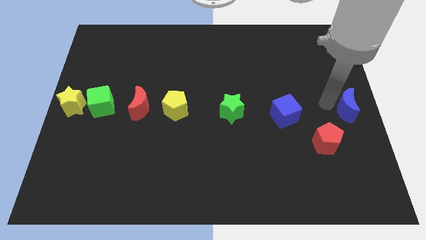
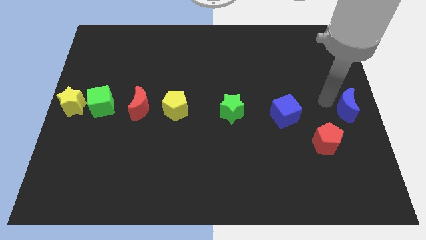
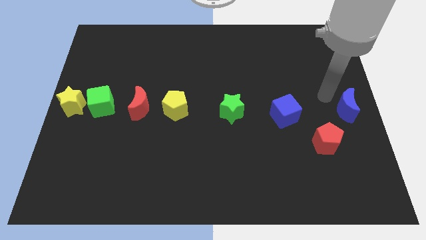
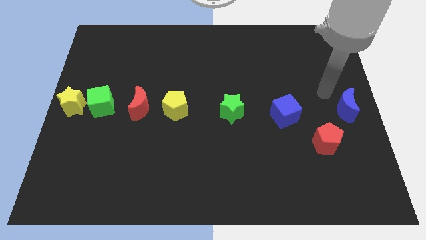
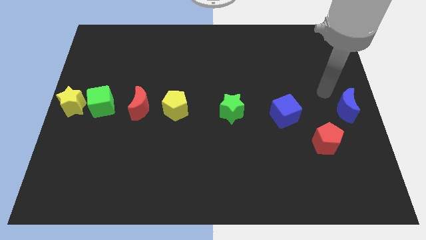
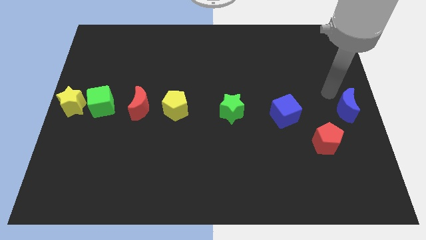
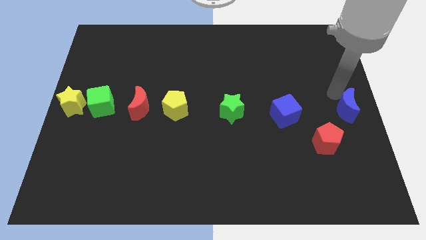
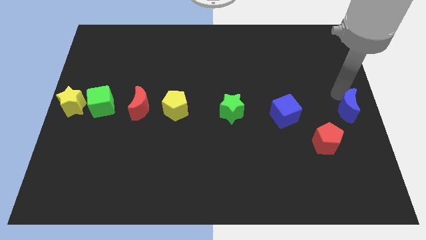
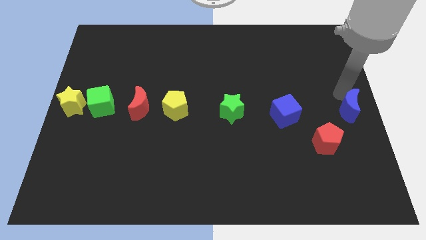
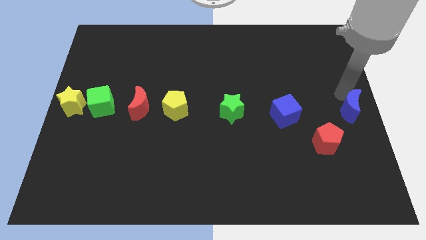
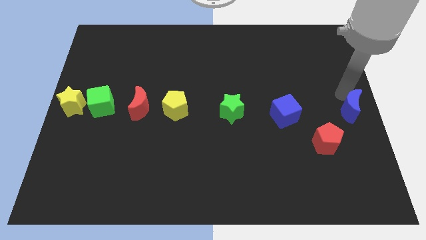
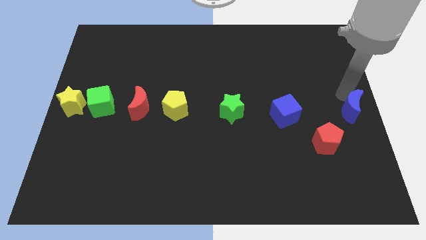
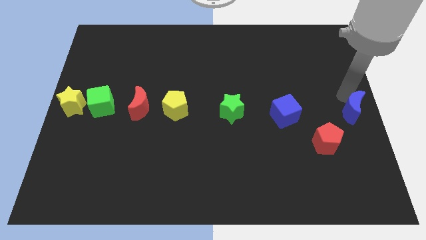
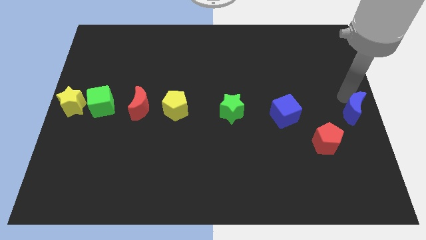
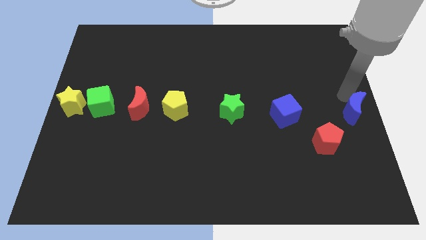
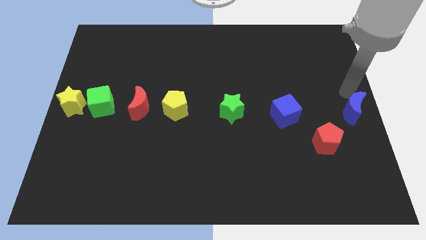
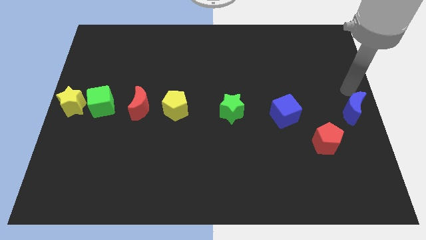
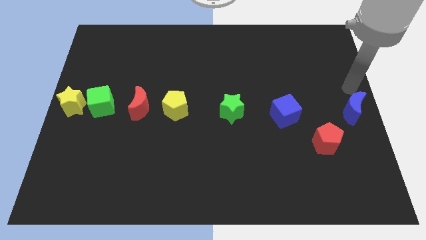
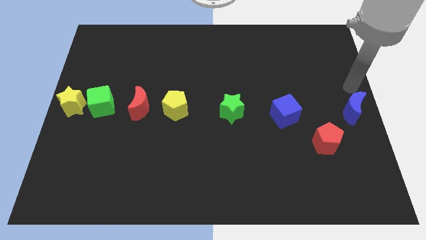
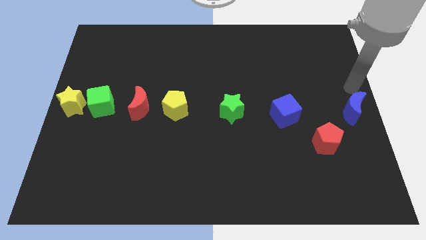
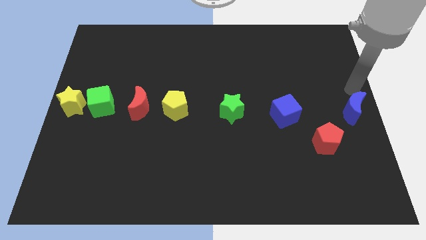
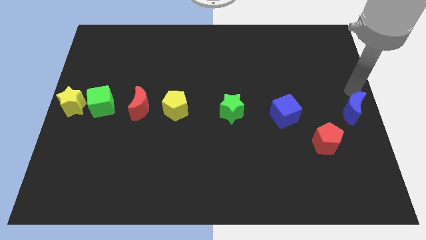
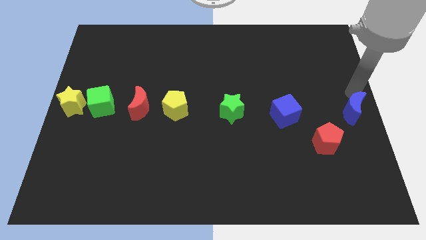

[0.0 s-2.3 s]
move the blue crescent to the right center of the board

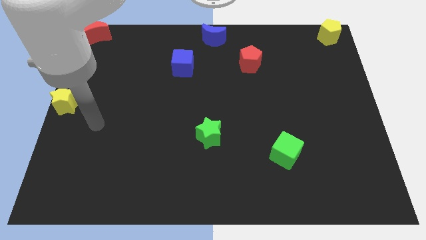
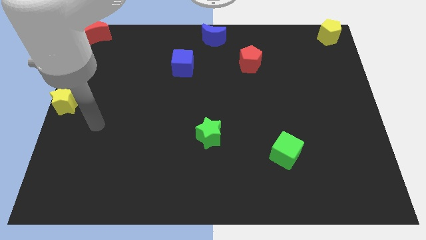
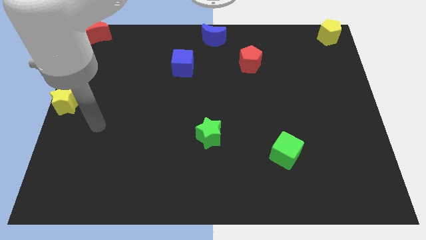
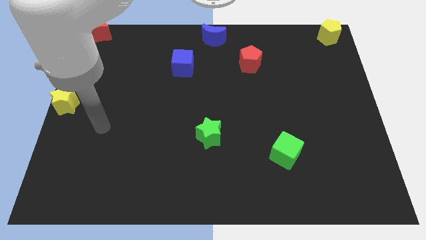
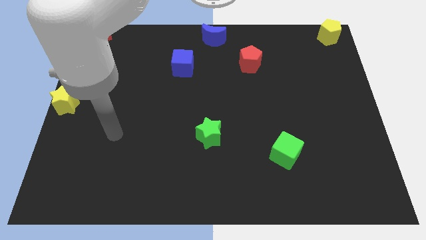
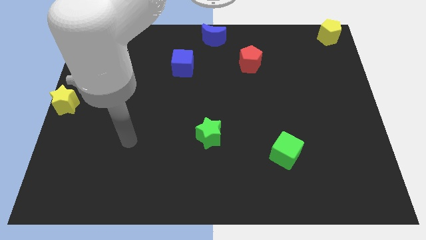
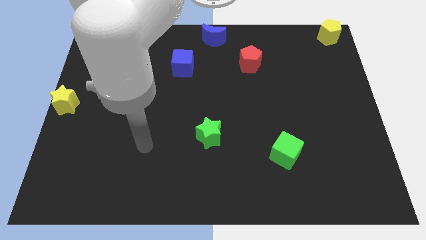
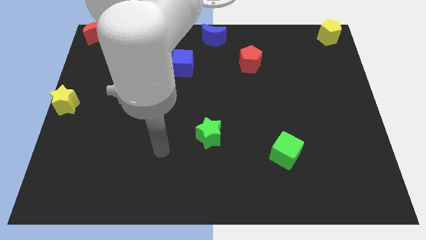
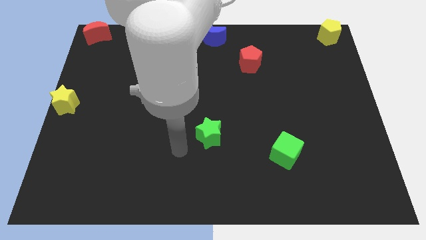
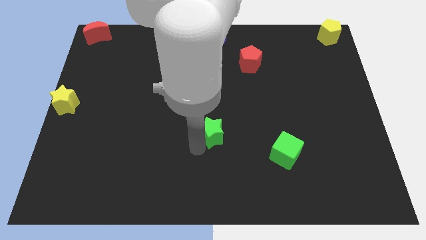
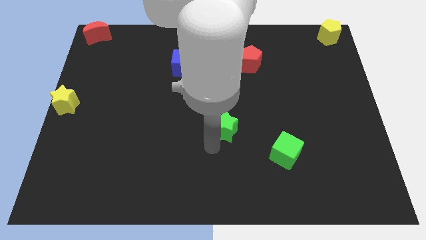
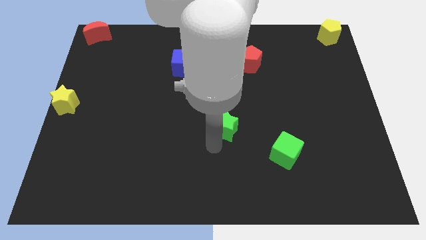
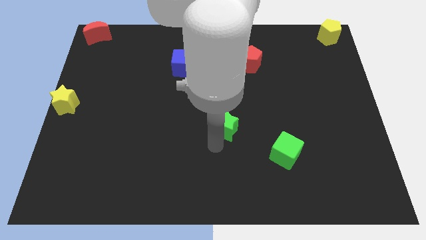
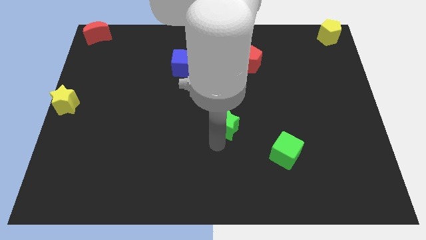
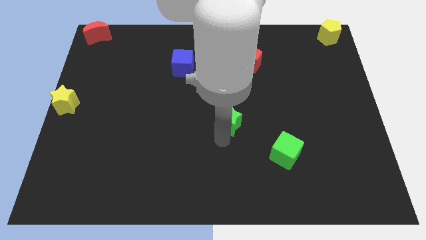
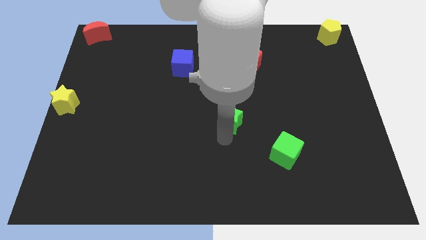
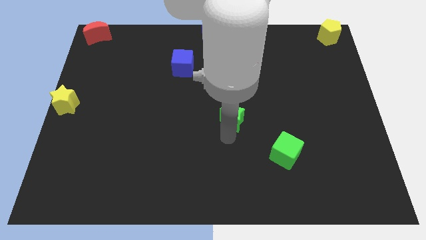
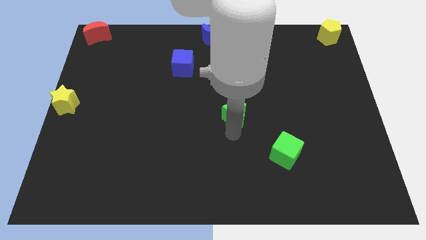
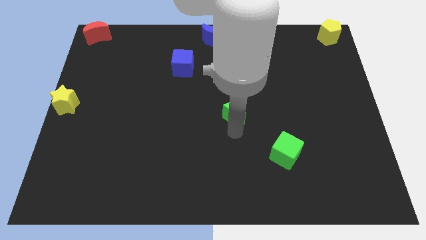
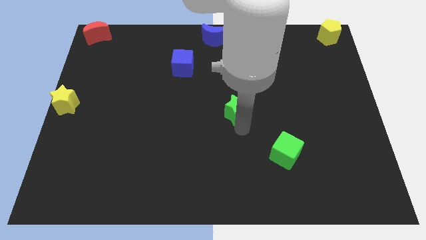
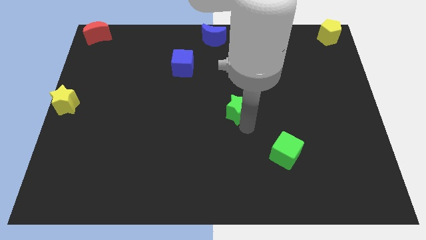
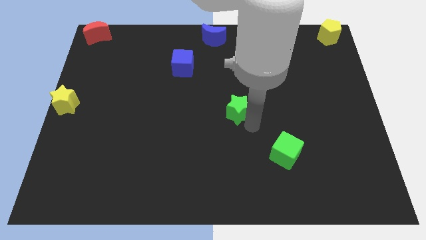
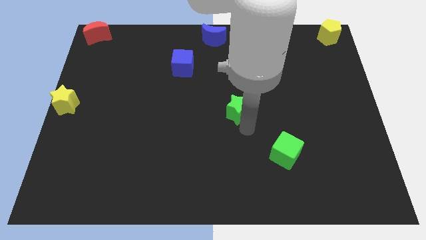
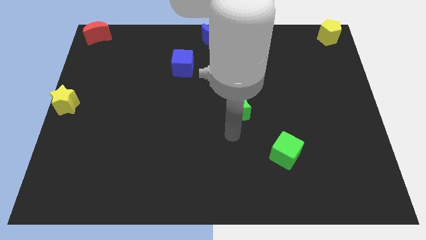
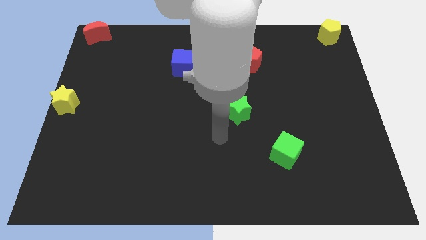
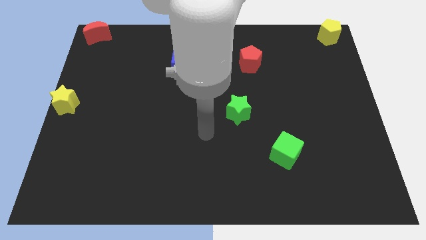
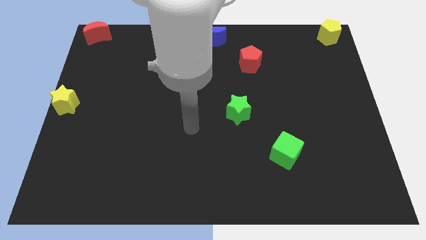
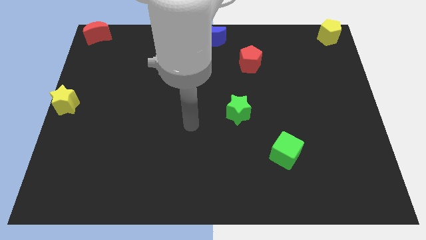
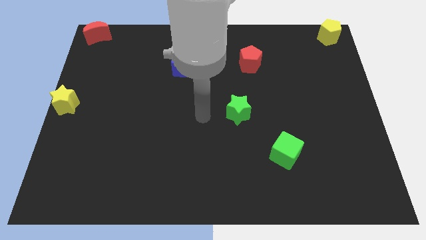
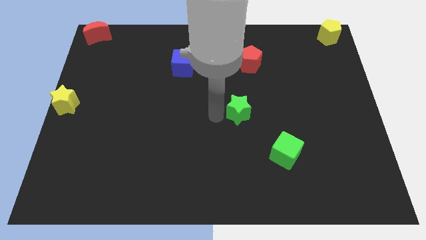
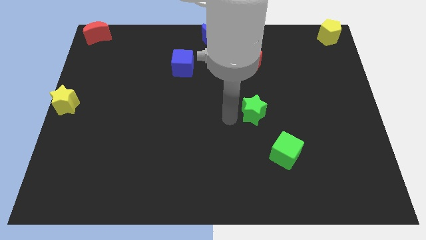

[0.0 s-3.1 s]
move the green star between green cube and blue cube

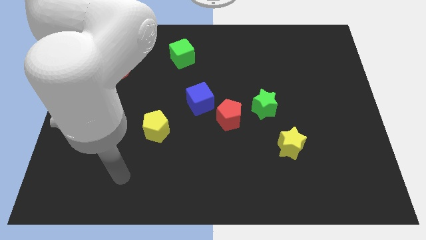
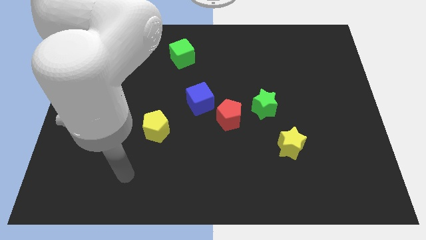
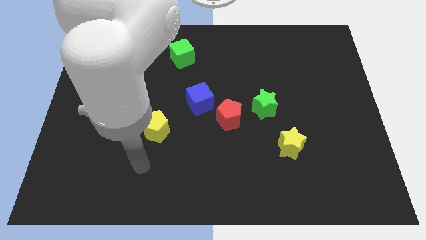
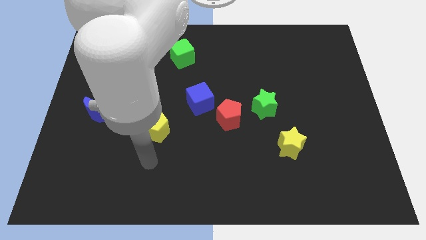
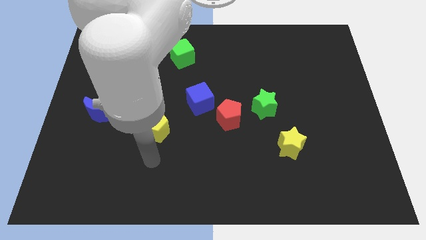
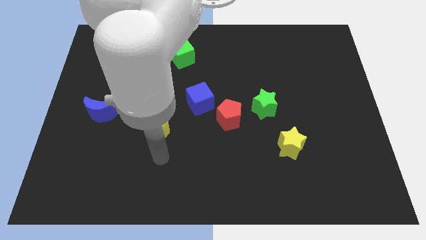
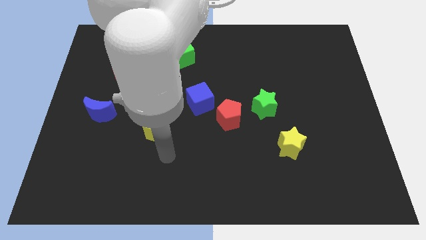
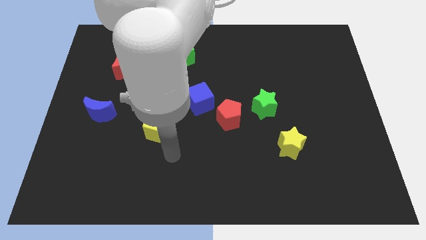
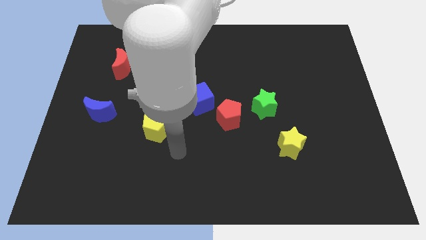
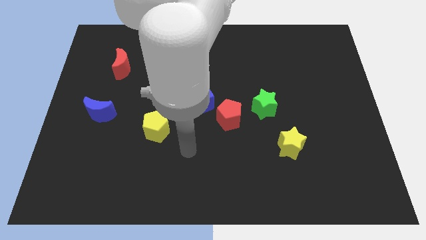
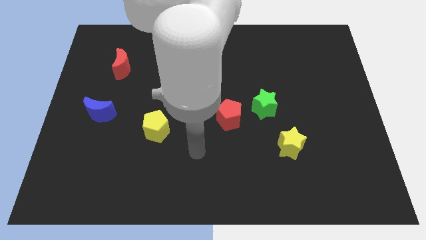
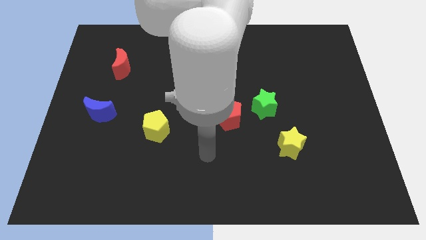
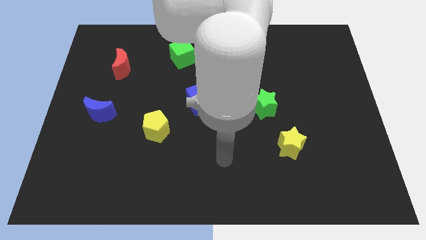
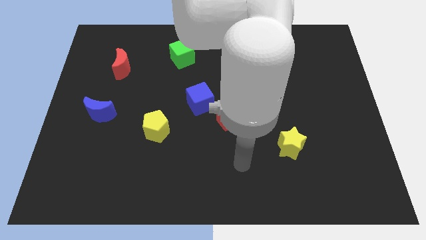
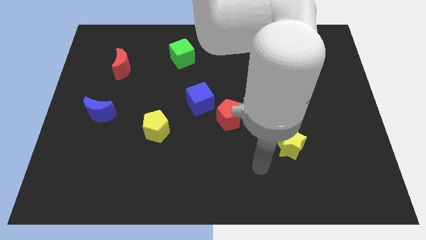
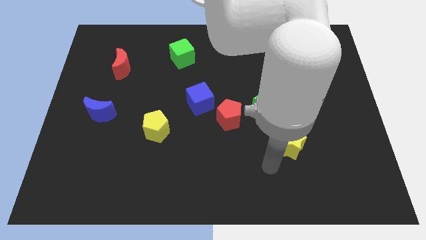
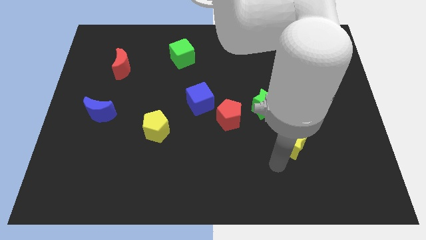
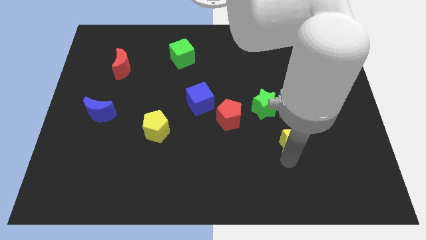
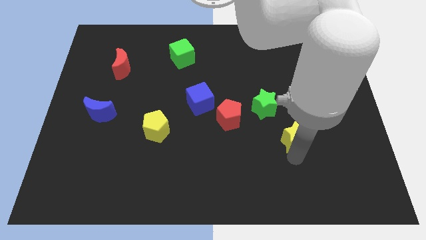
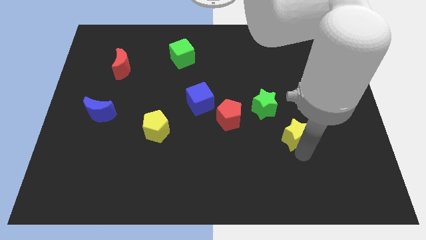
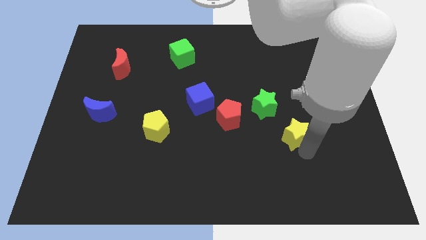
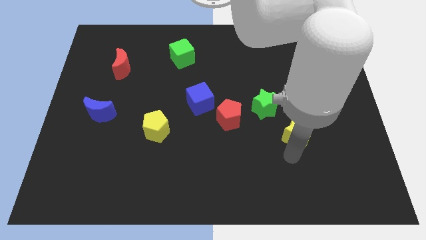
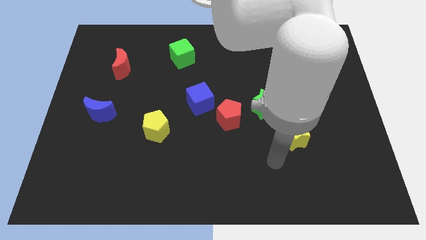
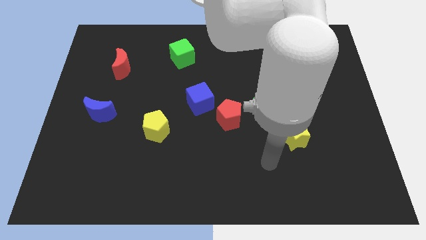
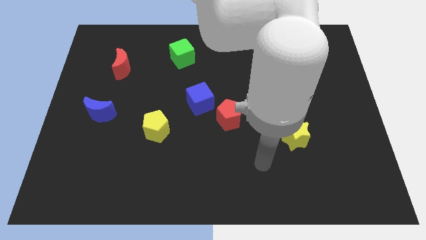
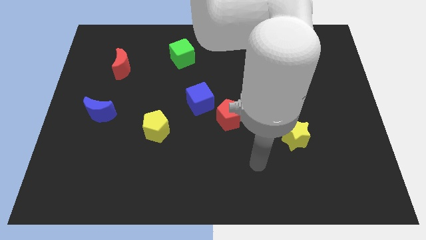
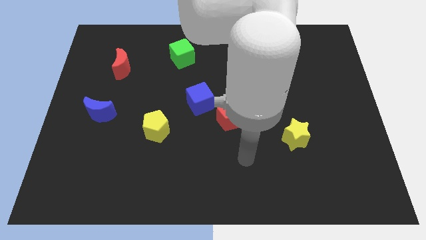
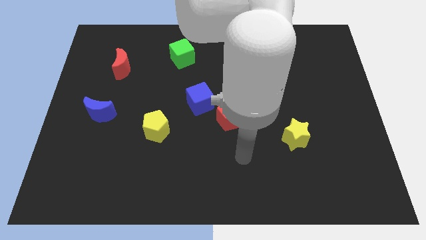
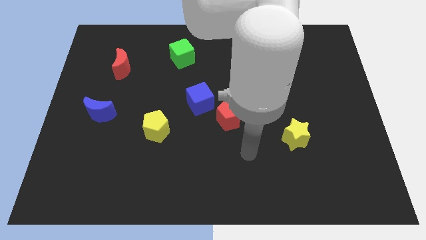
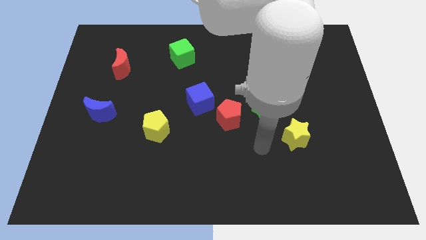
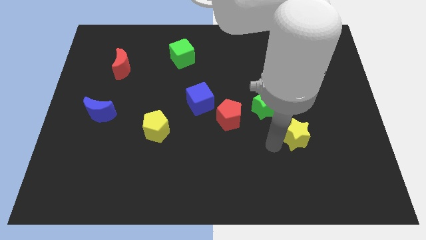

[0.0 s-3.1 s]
slide the yellow star slightly to the top side

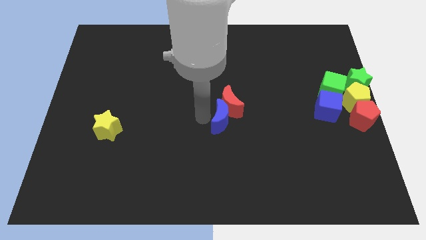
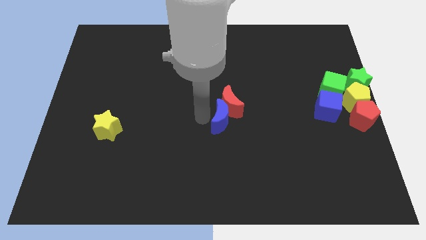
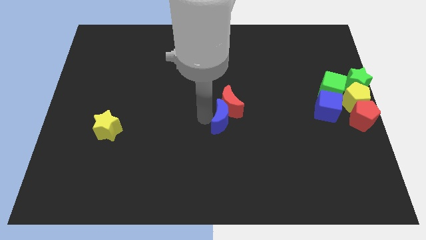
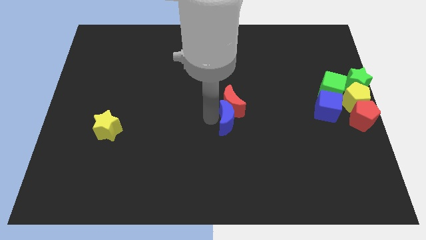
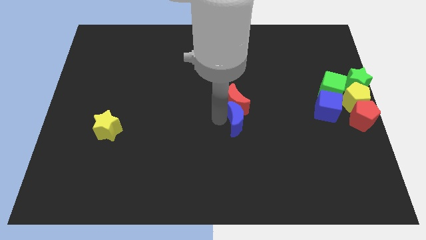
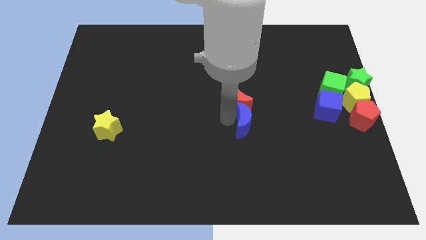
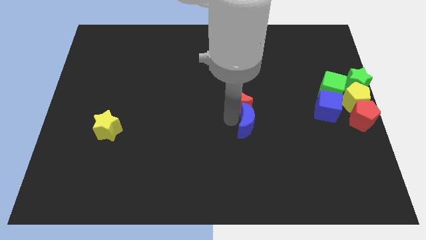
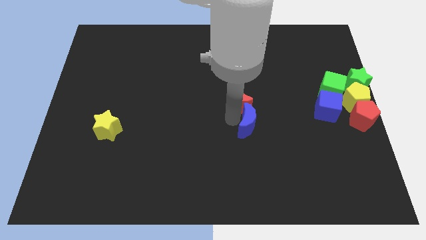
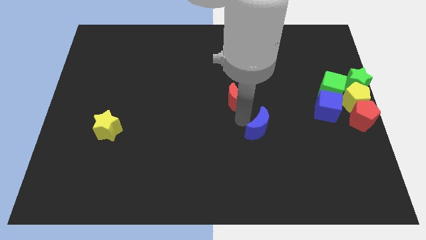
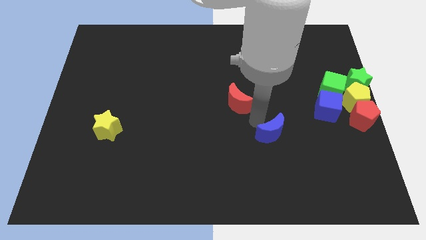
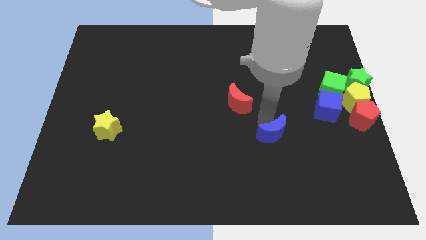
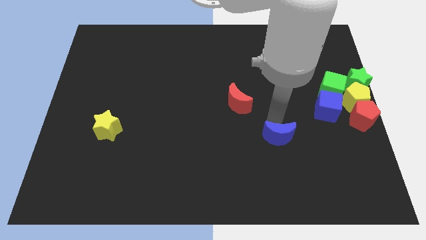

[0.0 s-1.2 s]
push the blue crescent away from the red crescent
